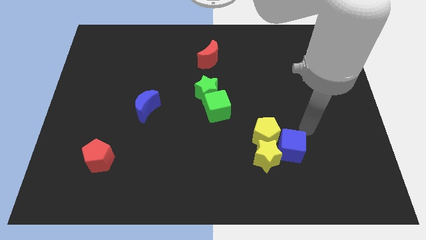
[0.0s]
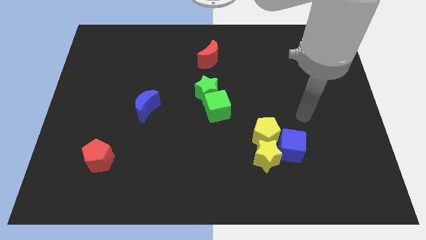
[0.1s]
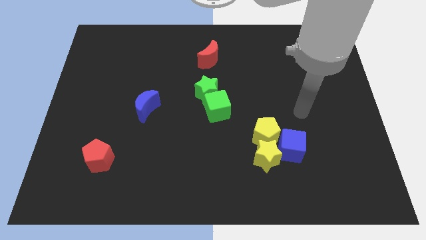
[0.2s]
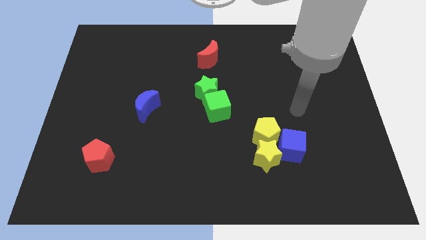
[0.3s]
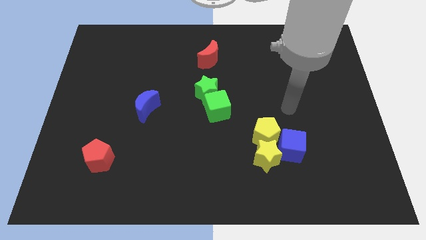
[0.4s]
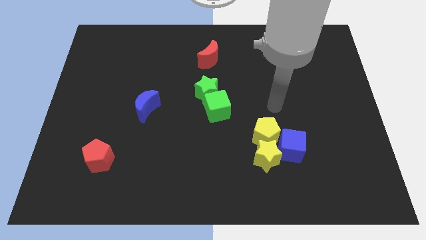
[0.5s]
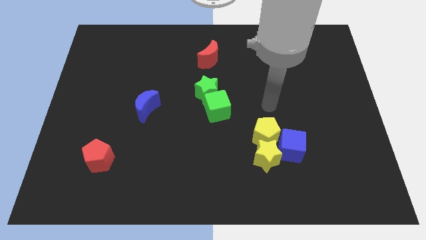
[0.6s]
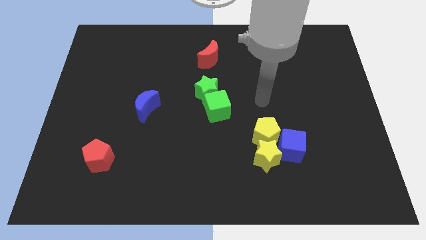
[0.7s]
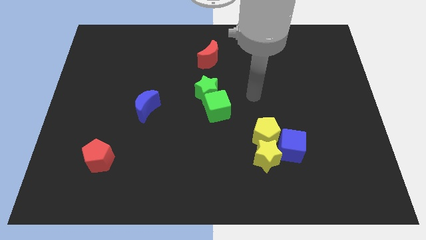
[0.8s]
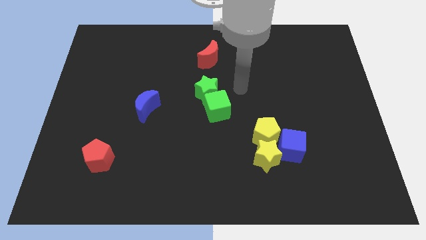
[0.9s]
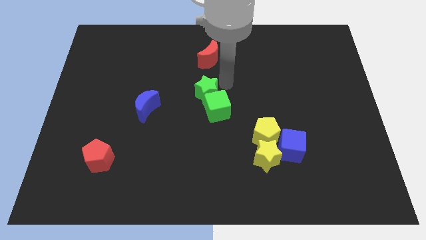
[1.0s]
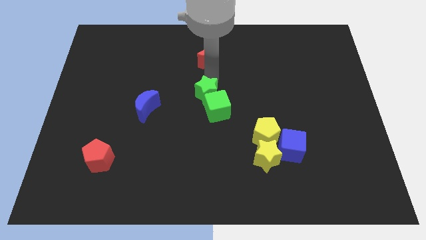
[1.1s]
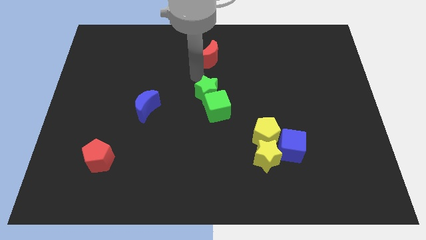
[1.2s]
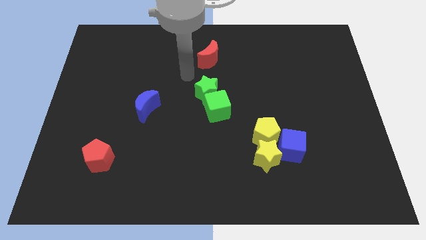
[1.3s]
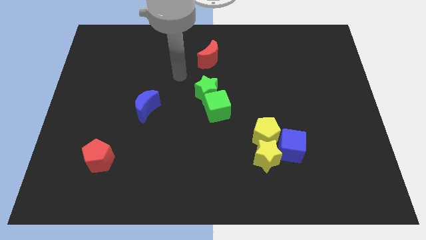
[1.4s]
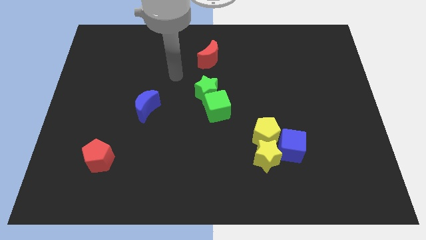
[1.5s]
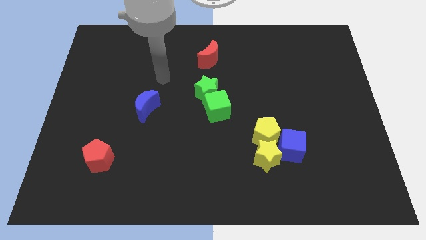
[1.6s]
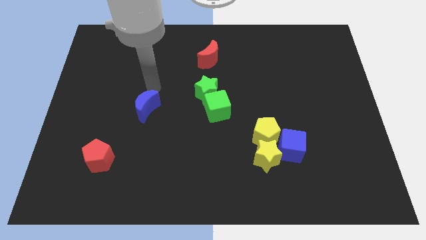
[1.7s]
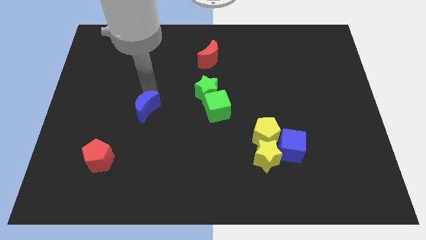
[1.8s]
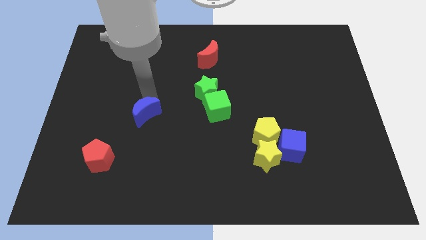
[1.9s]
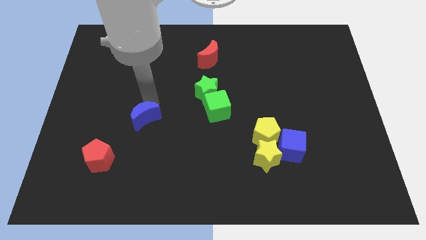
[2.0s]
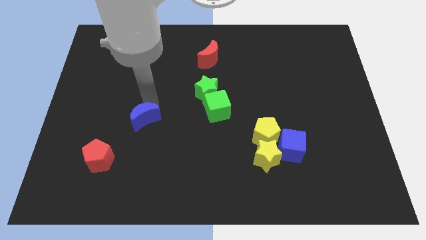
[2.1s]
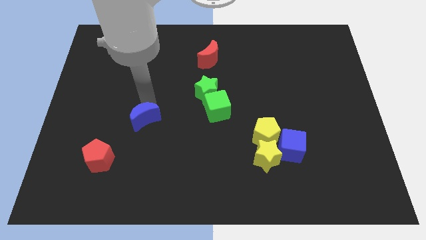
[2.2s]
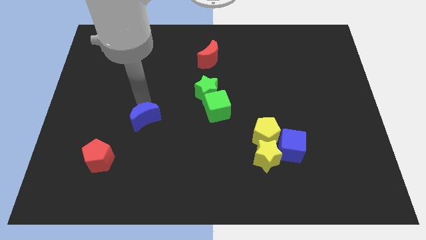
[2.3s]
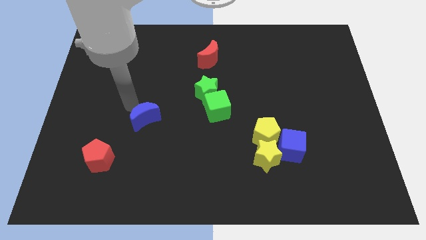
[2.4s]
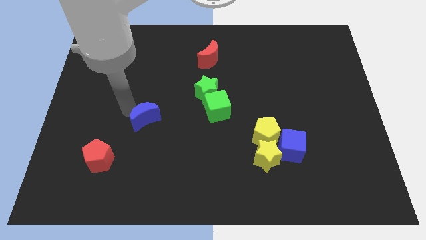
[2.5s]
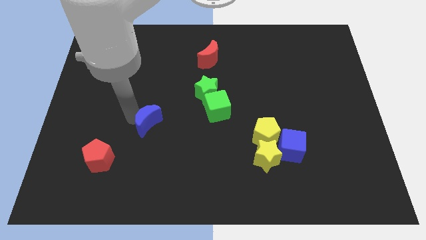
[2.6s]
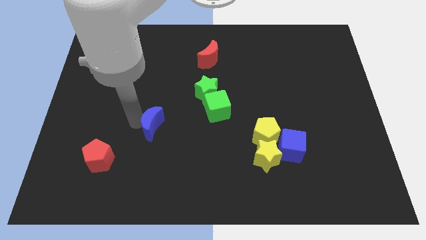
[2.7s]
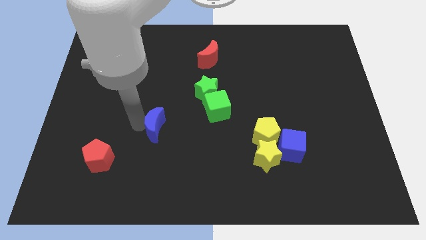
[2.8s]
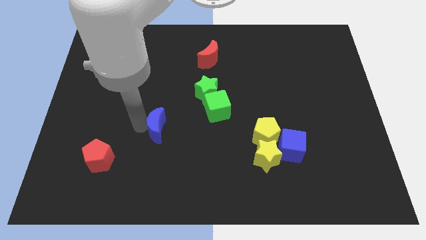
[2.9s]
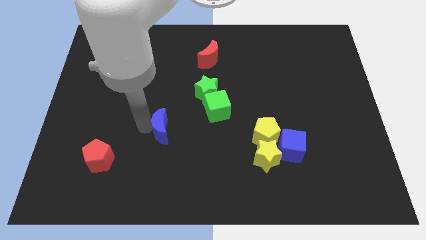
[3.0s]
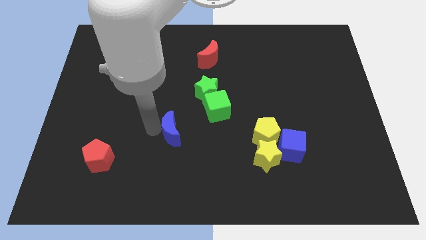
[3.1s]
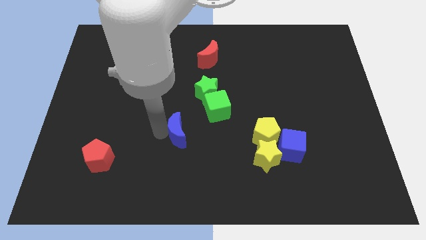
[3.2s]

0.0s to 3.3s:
slide the blue crescent towards the right side of the table

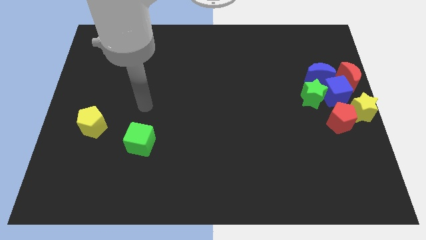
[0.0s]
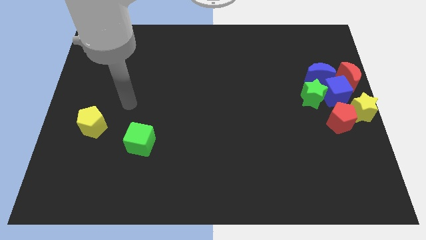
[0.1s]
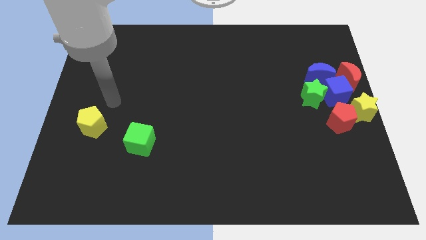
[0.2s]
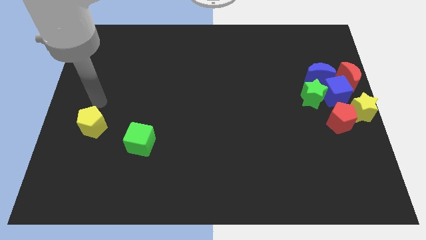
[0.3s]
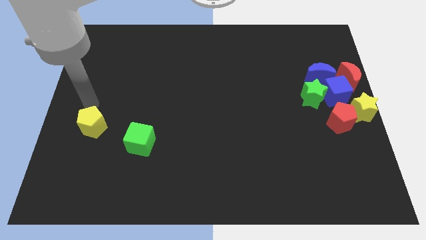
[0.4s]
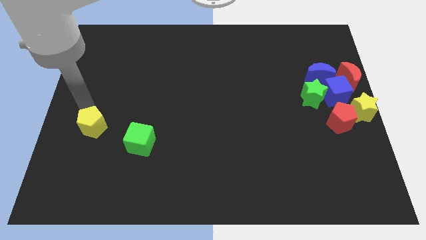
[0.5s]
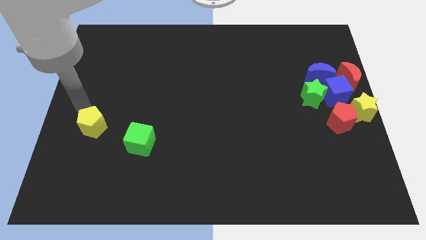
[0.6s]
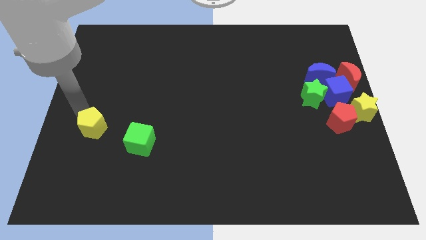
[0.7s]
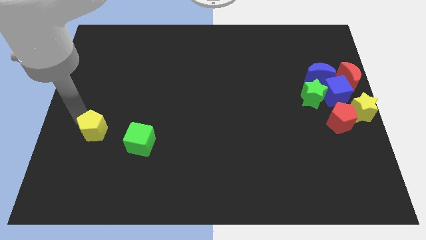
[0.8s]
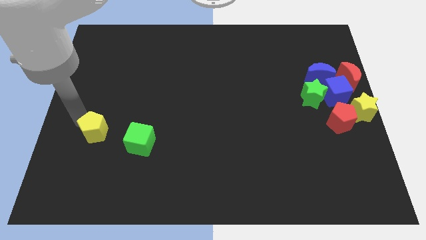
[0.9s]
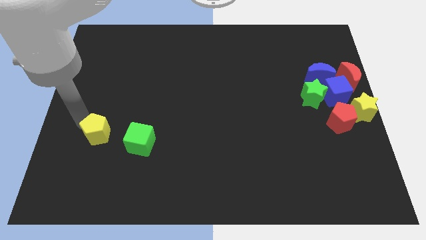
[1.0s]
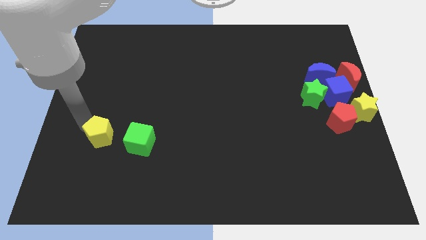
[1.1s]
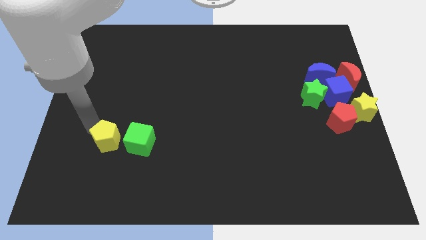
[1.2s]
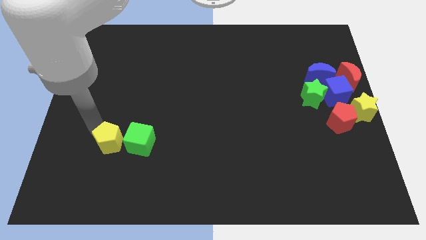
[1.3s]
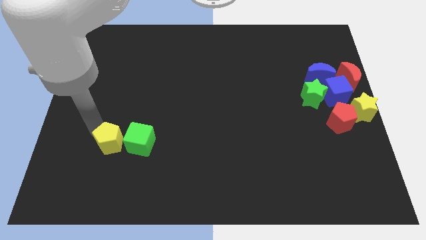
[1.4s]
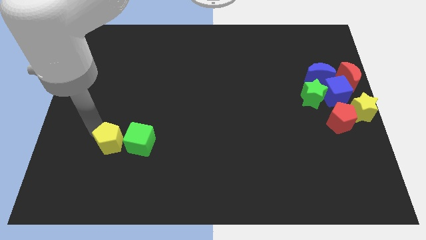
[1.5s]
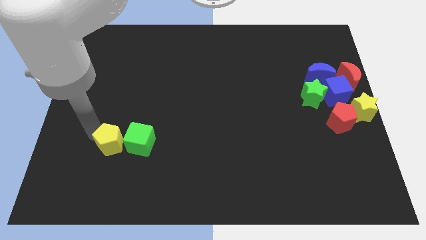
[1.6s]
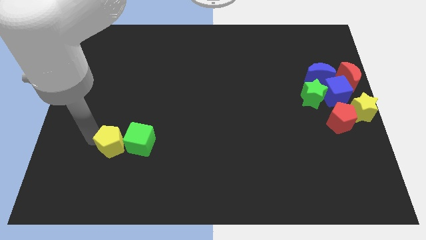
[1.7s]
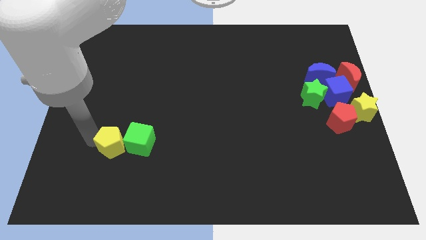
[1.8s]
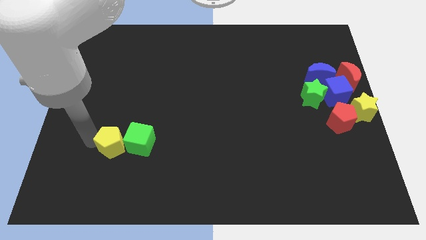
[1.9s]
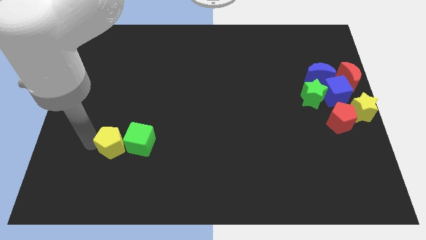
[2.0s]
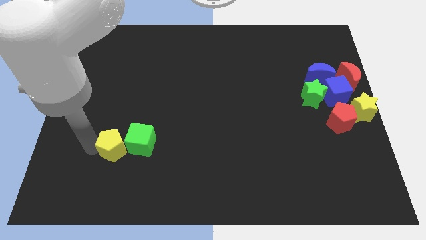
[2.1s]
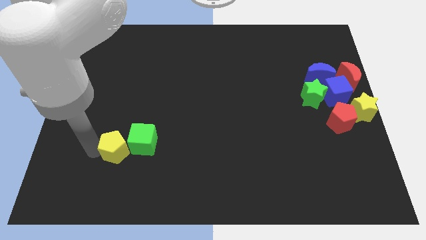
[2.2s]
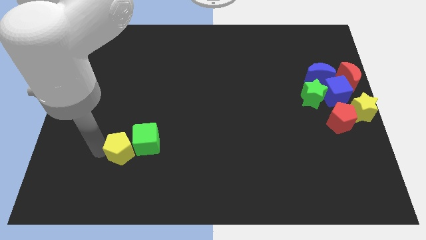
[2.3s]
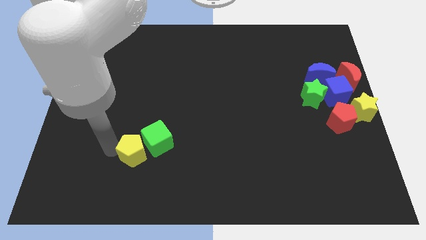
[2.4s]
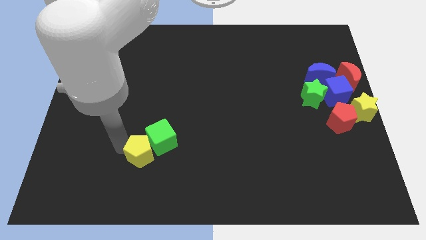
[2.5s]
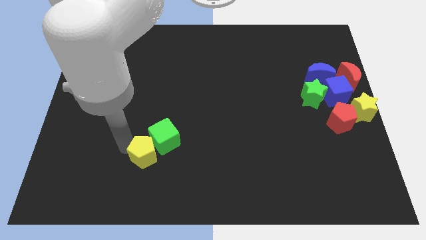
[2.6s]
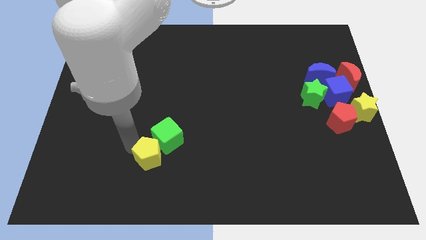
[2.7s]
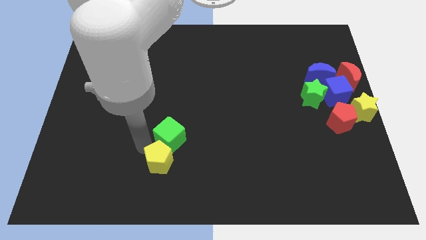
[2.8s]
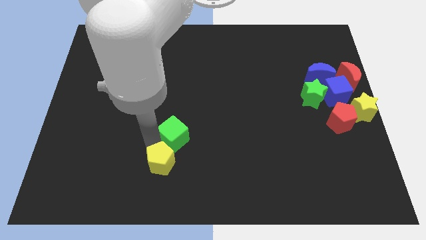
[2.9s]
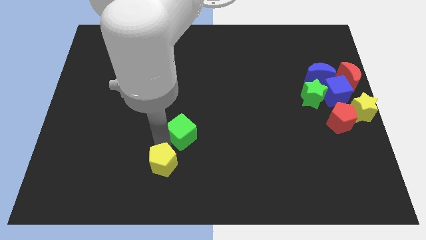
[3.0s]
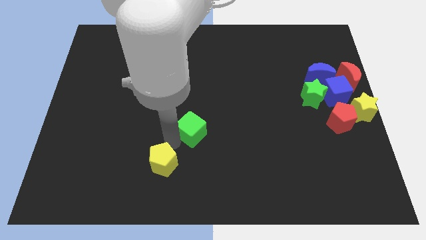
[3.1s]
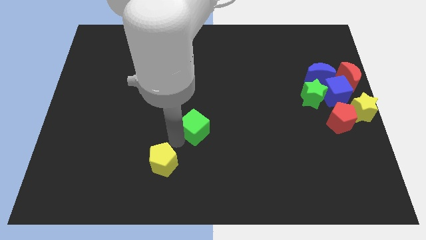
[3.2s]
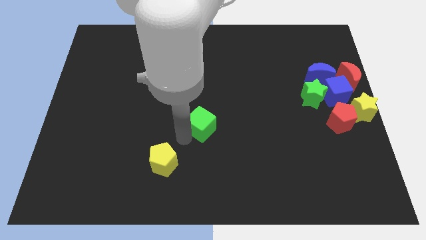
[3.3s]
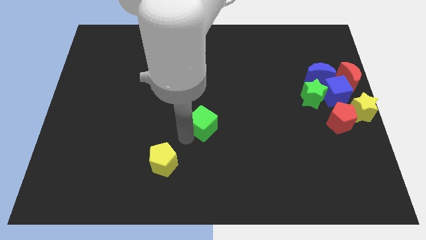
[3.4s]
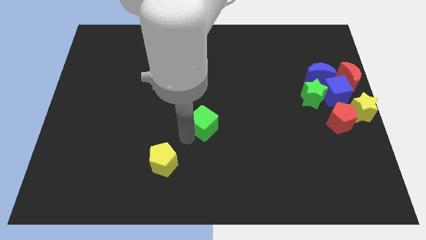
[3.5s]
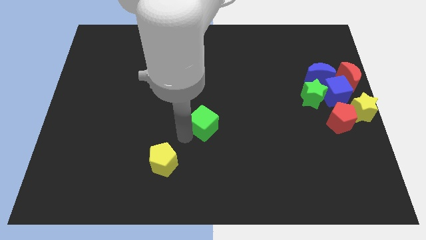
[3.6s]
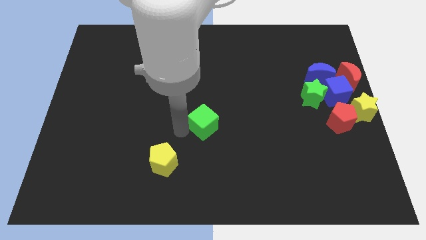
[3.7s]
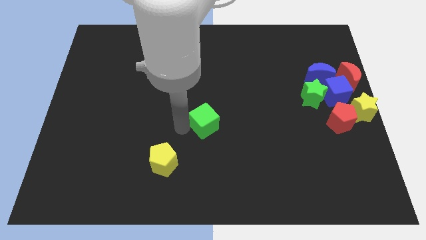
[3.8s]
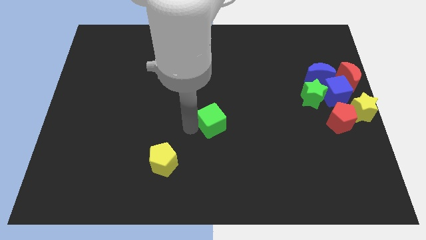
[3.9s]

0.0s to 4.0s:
separate the green cube from the yellow pentagon

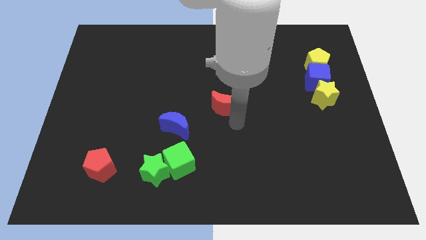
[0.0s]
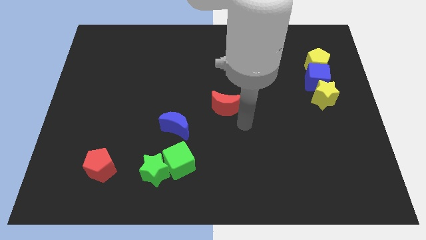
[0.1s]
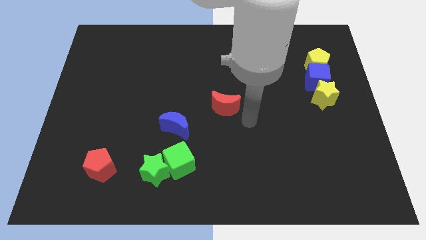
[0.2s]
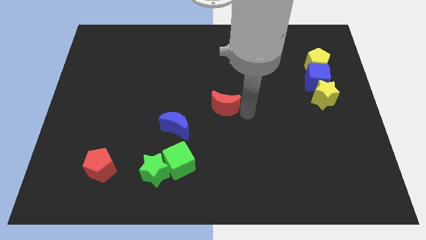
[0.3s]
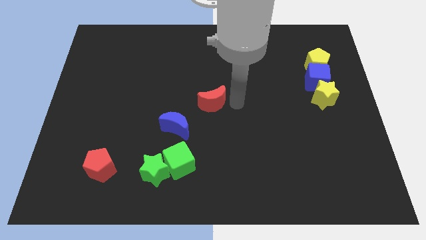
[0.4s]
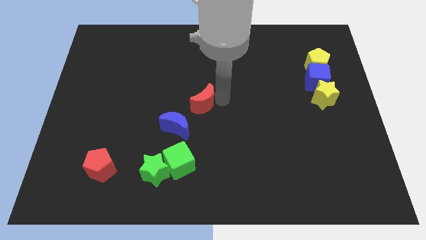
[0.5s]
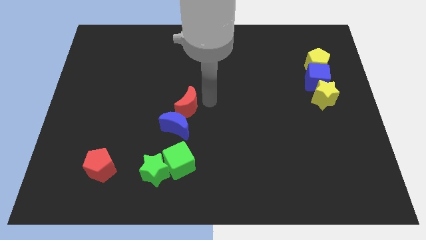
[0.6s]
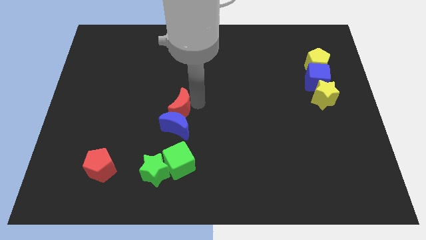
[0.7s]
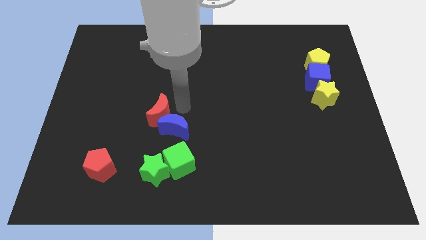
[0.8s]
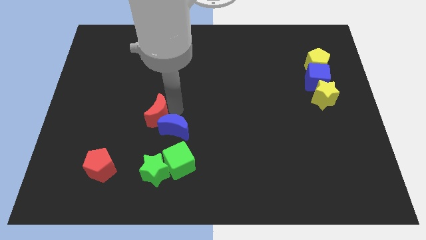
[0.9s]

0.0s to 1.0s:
push the red crescent into the blue crescent

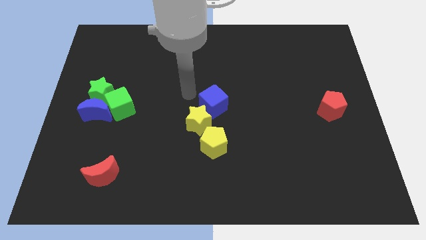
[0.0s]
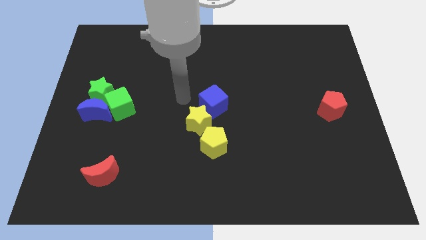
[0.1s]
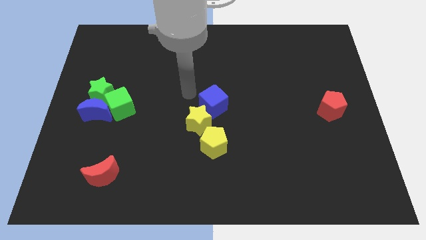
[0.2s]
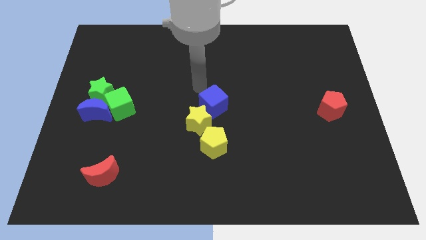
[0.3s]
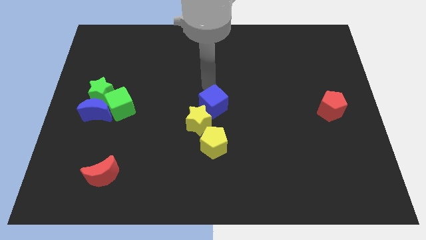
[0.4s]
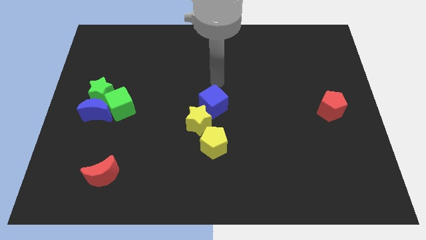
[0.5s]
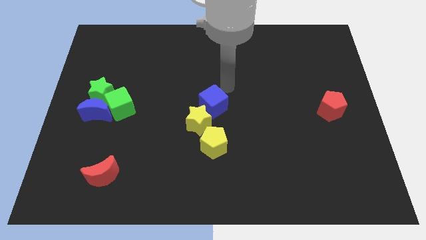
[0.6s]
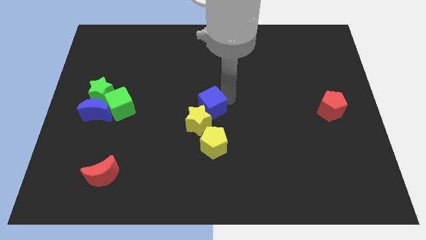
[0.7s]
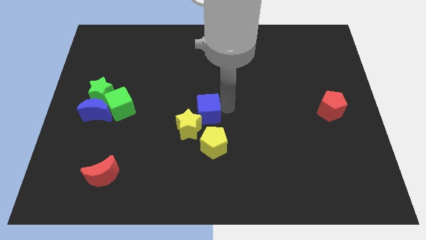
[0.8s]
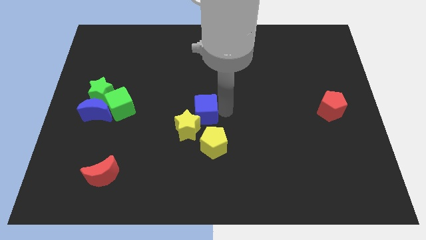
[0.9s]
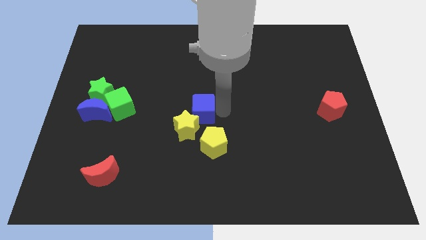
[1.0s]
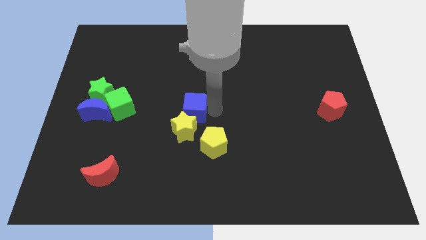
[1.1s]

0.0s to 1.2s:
push blue cube in to yellow star
